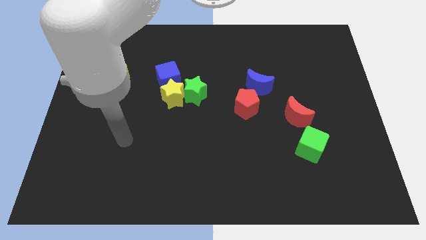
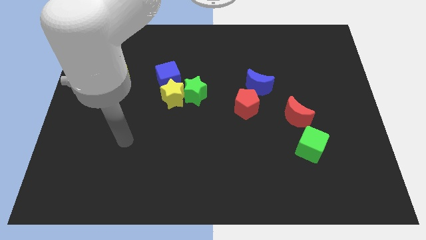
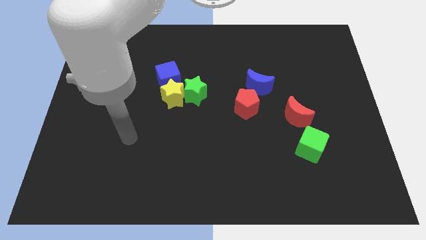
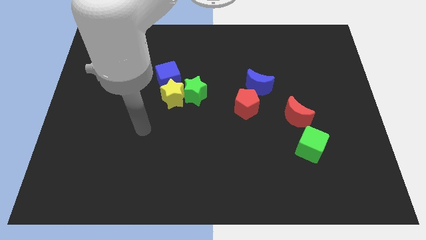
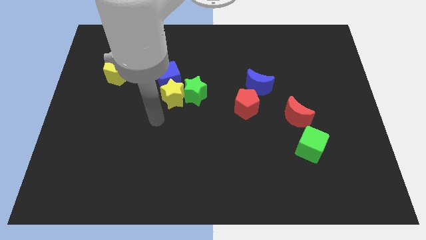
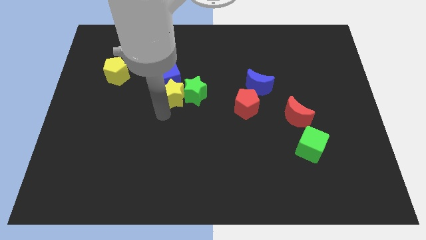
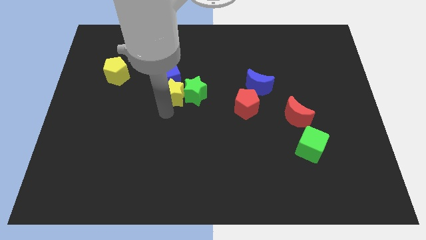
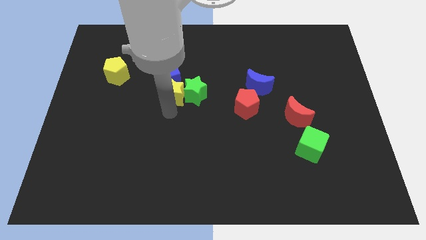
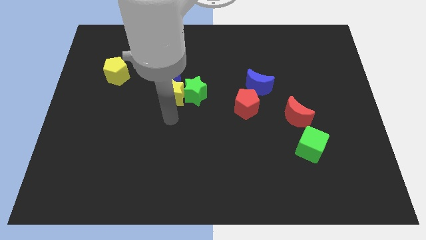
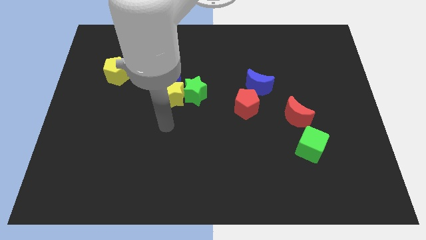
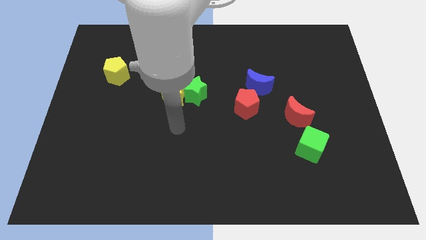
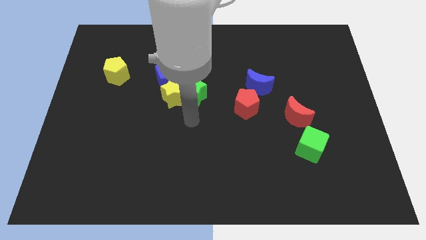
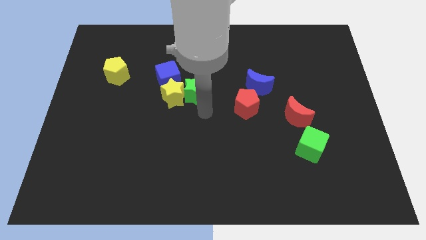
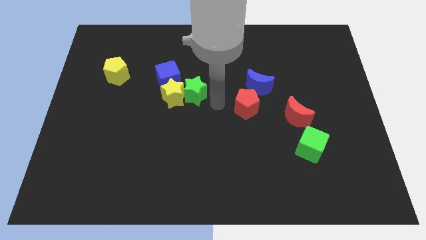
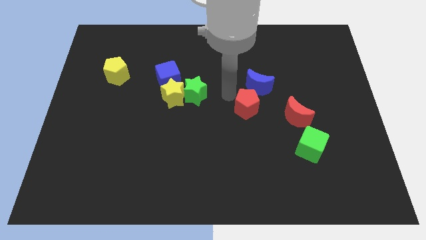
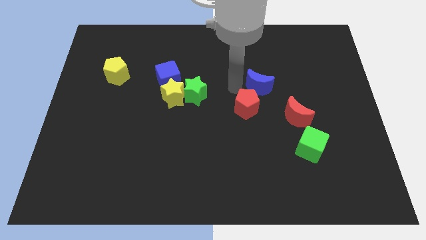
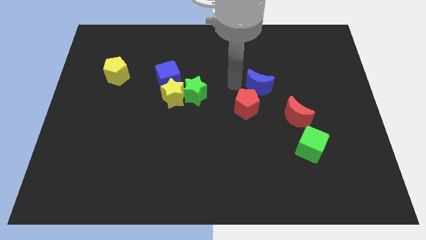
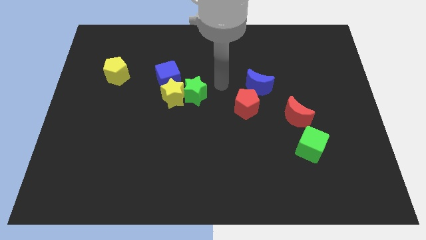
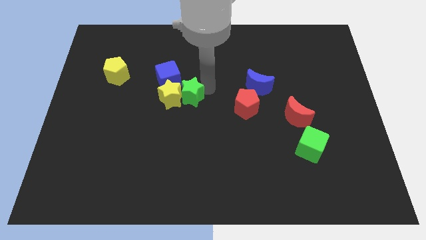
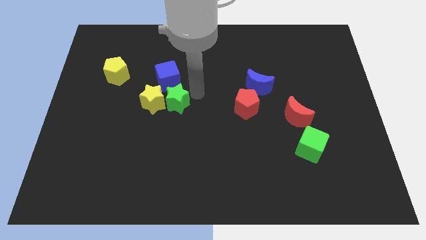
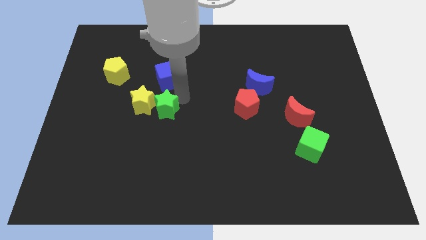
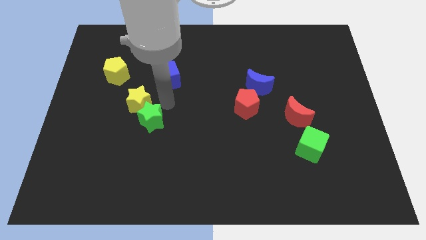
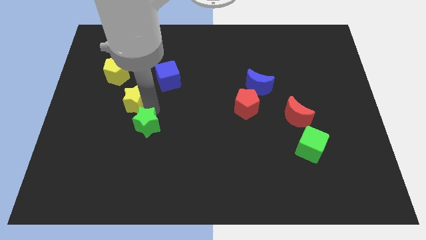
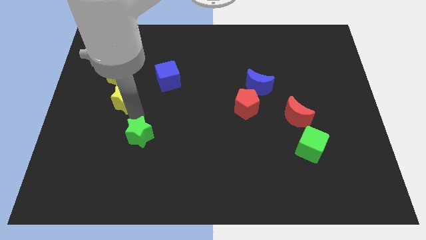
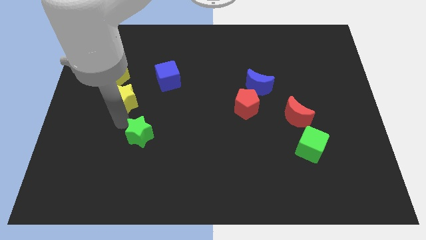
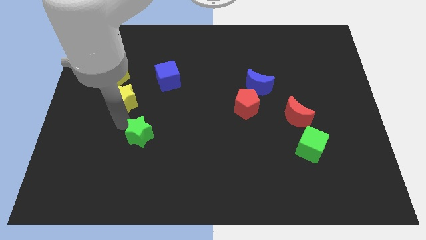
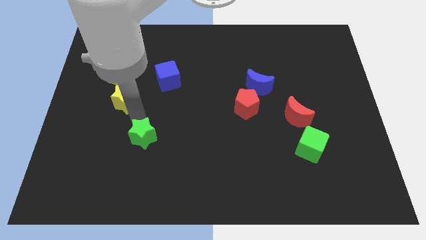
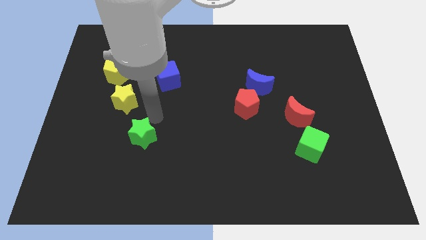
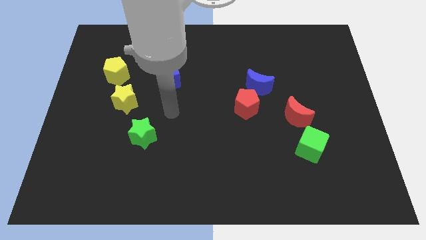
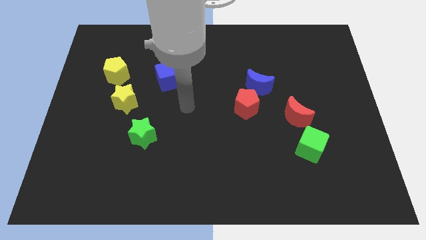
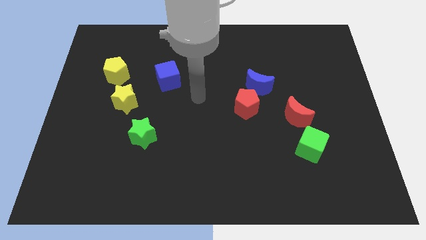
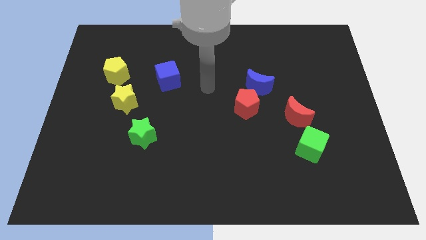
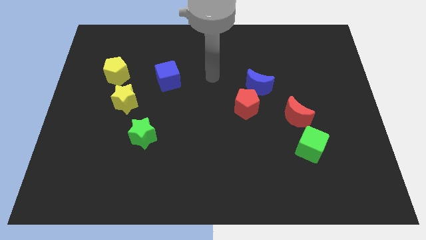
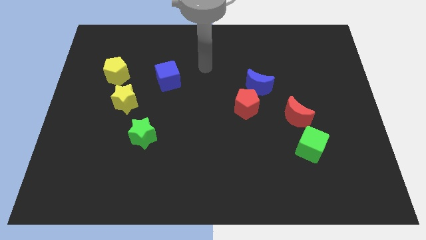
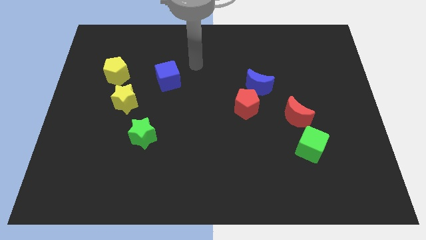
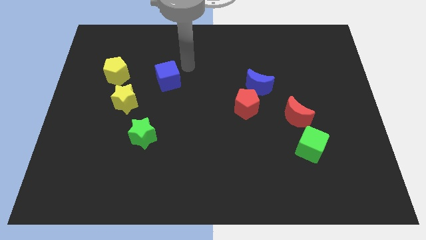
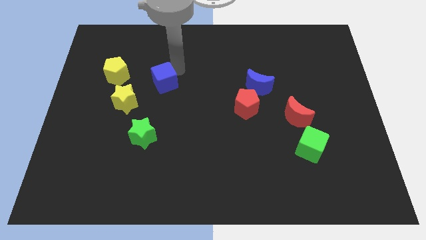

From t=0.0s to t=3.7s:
place the green star diagonal to the yellow star

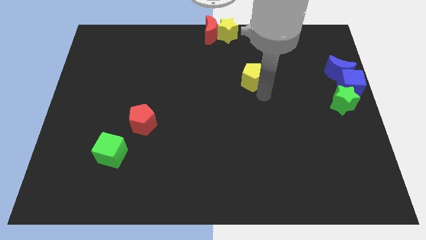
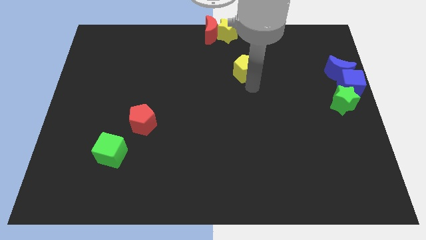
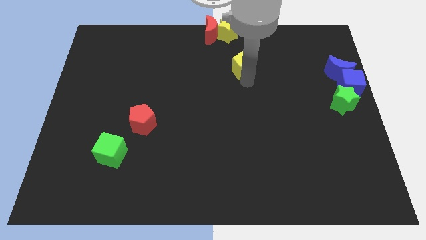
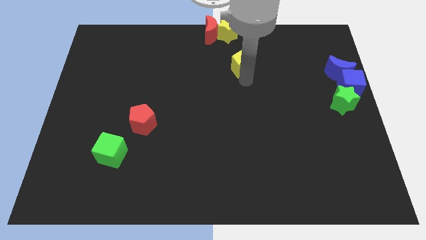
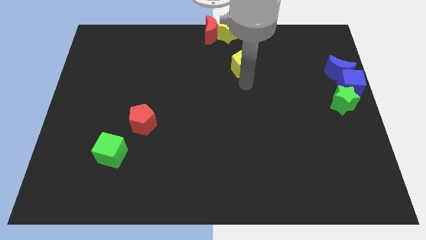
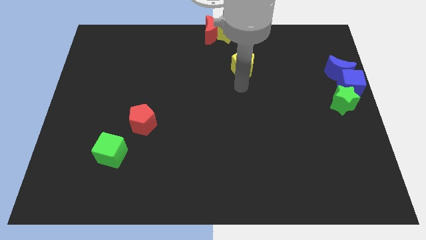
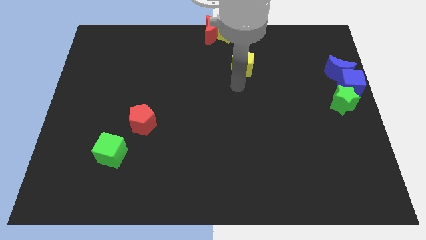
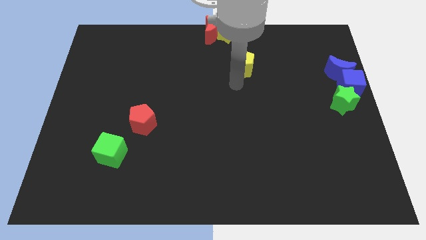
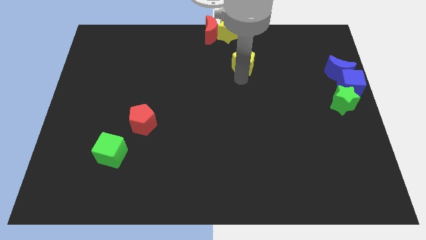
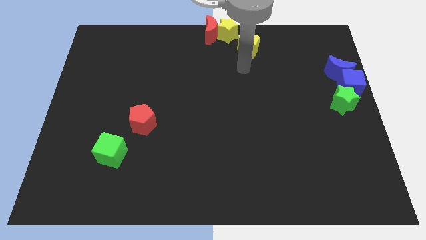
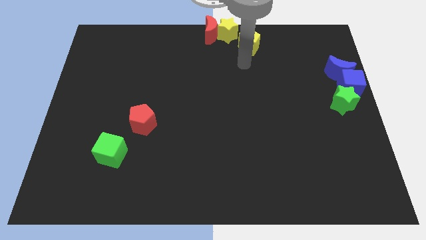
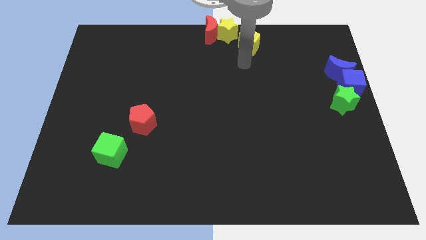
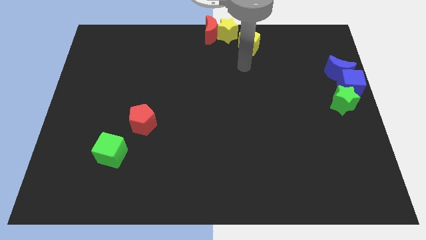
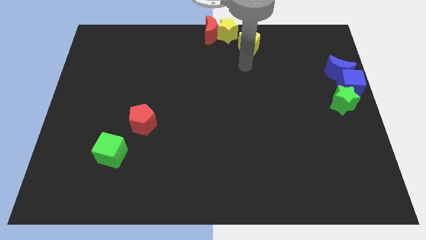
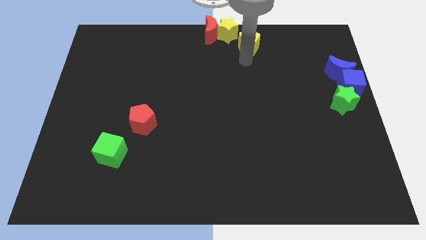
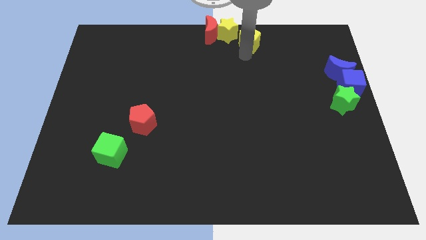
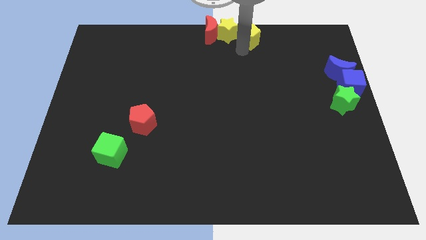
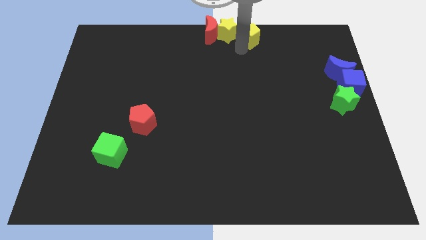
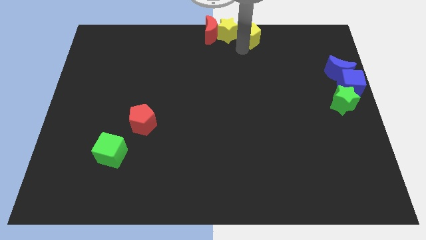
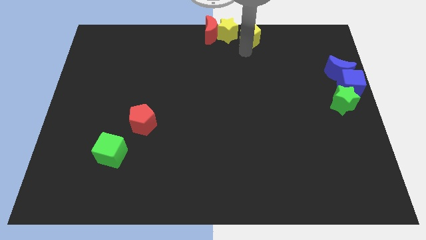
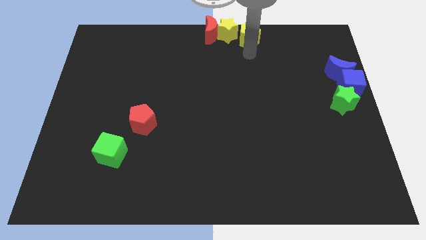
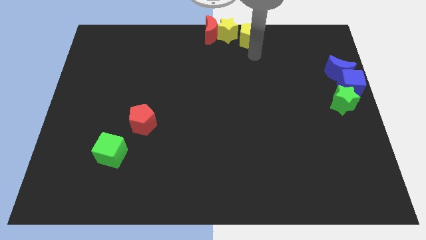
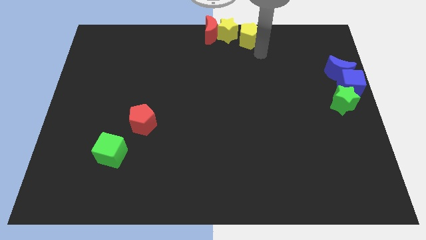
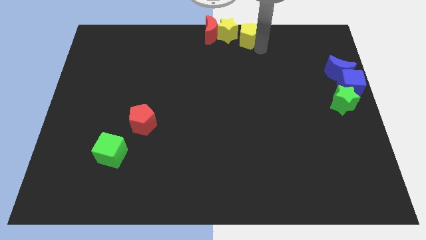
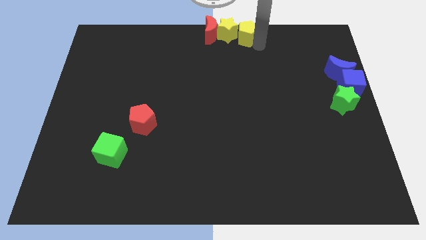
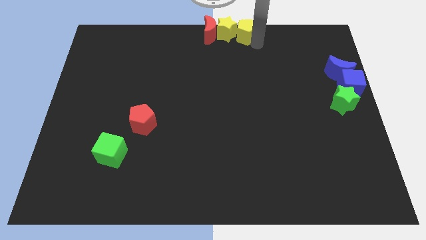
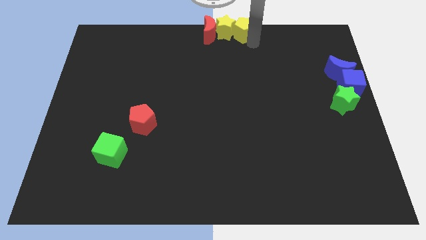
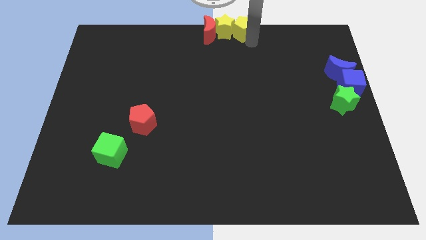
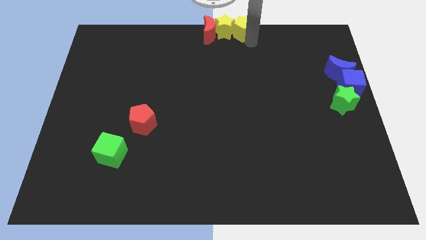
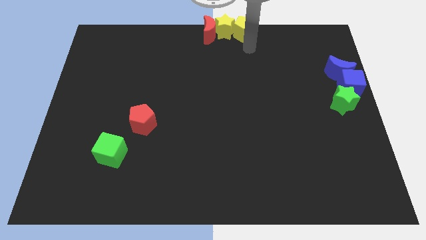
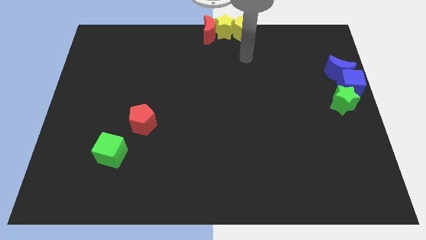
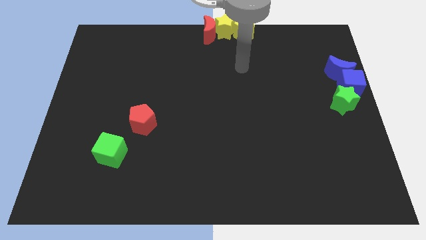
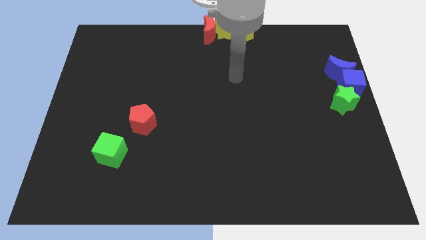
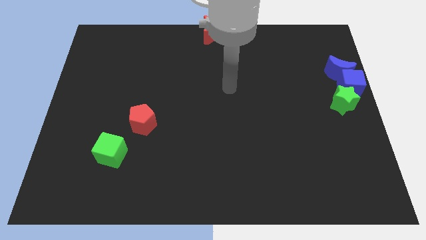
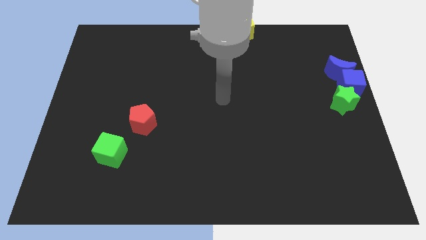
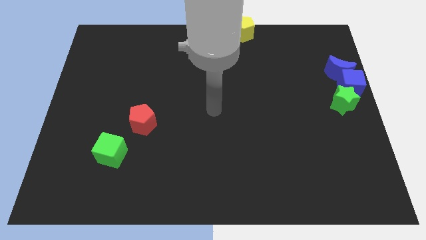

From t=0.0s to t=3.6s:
place the yellow pentagon to the right side of the yellow star

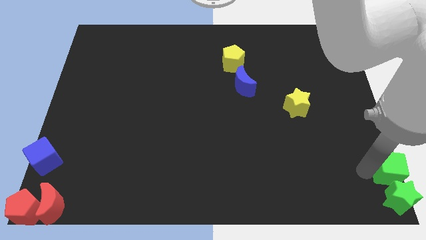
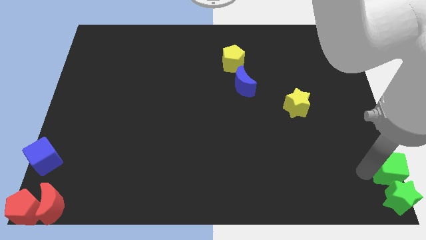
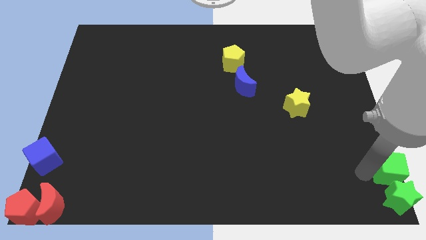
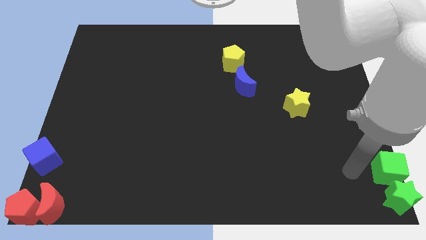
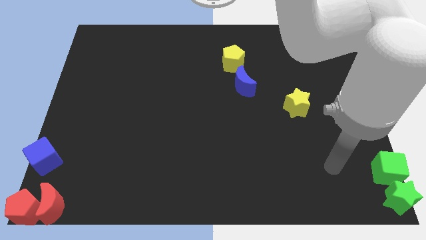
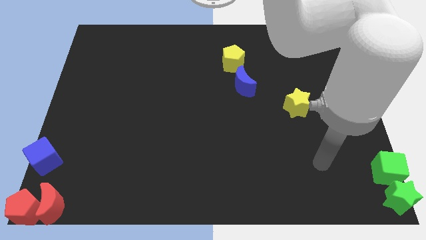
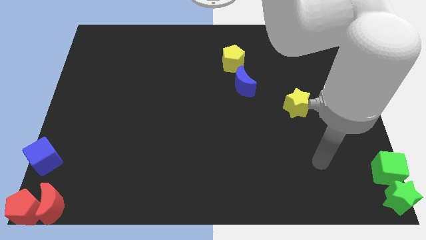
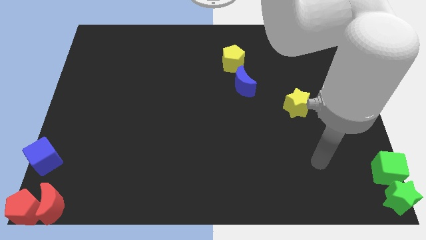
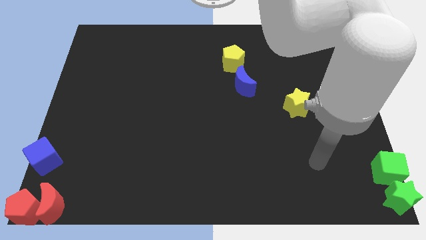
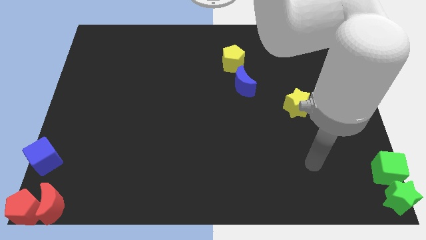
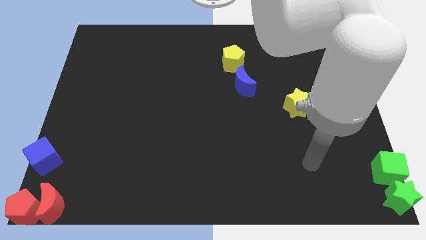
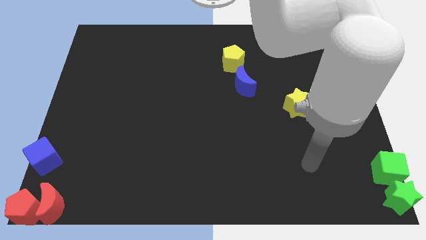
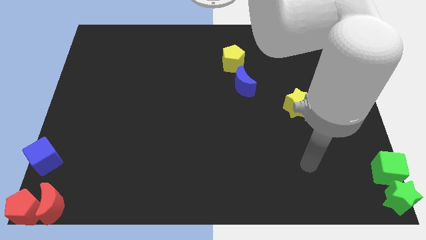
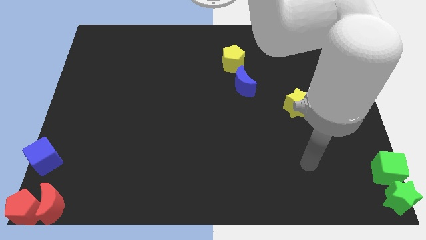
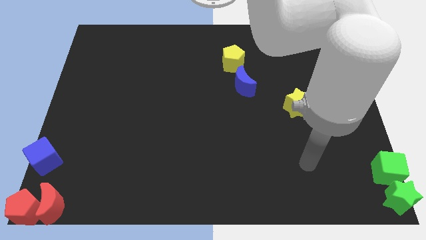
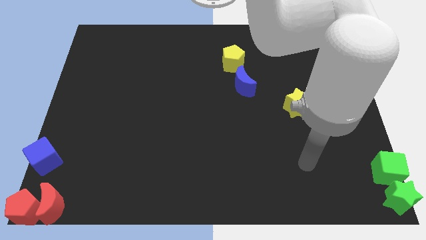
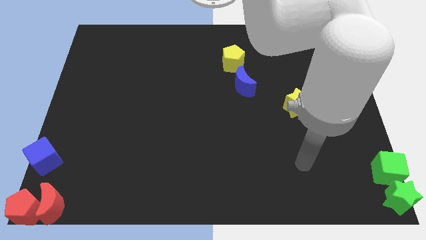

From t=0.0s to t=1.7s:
move the arm away from green cube

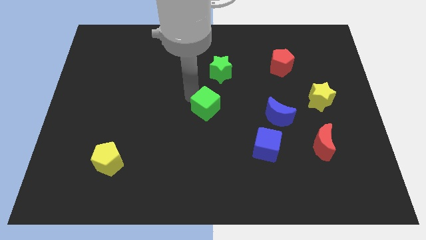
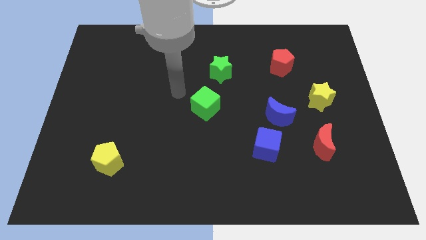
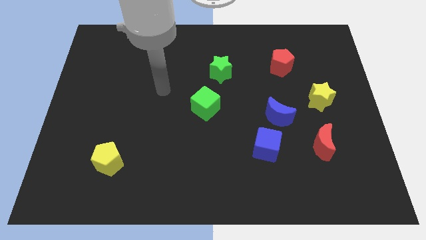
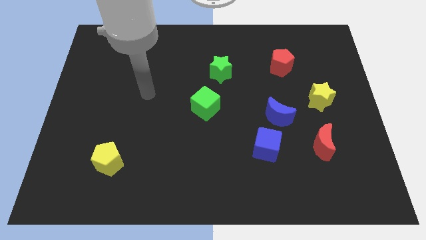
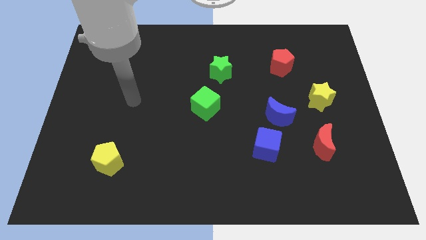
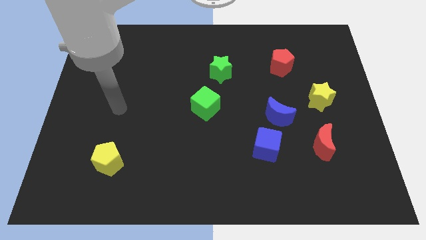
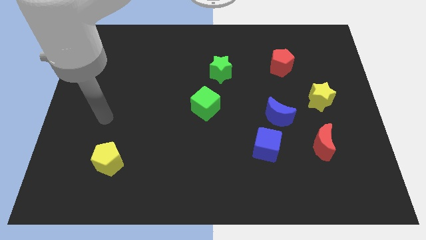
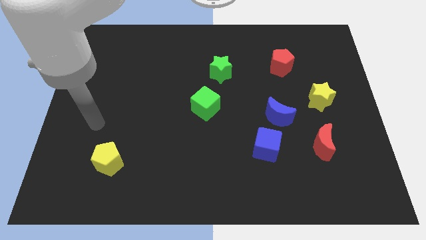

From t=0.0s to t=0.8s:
move the arm away from the green cube
